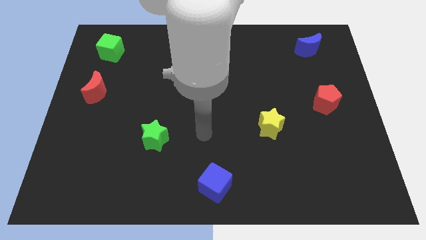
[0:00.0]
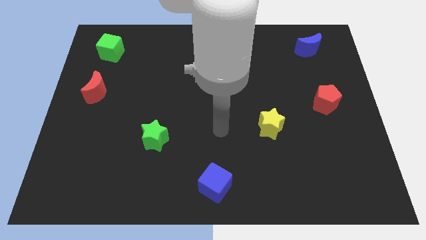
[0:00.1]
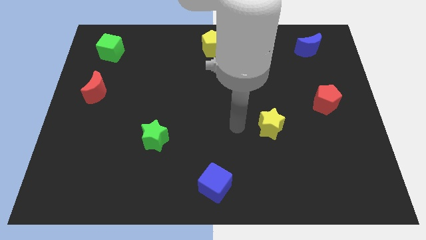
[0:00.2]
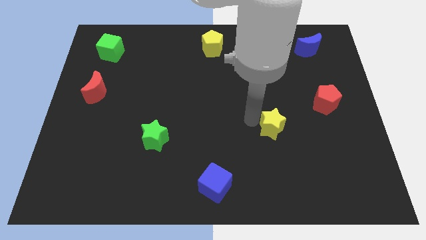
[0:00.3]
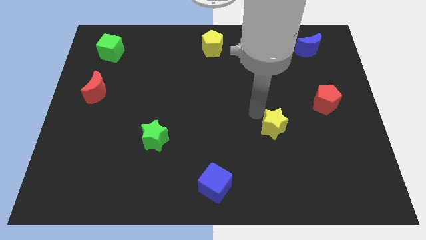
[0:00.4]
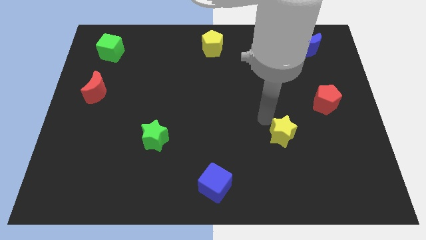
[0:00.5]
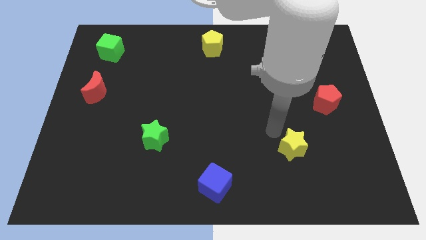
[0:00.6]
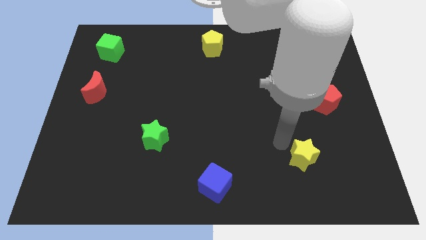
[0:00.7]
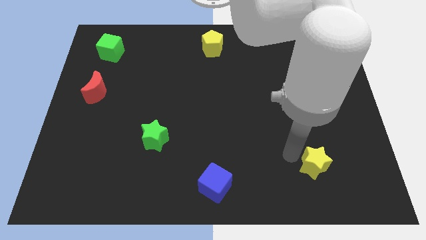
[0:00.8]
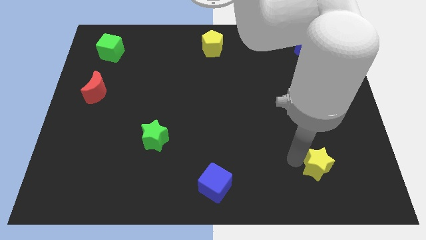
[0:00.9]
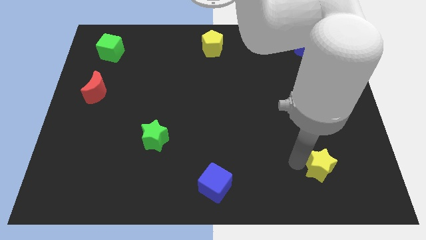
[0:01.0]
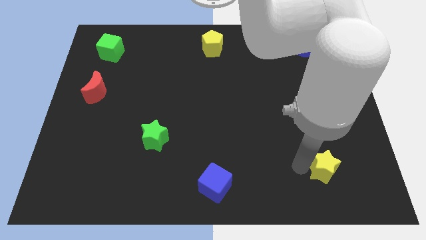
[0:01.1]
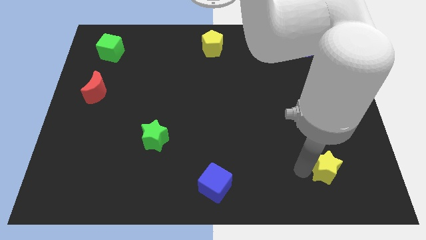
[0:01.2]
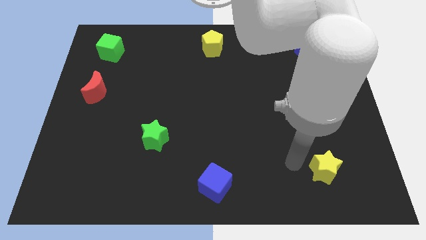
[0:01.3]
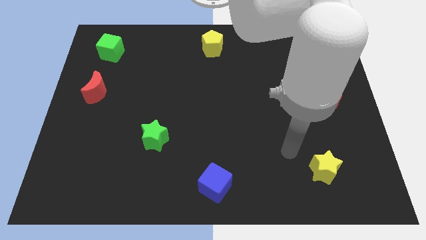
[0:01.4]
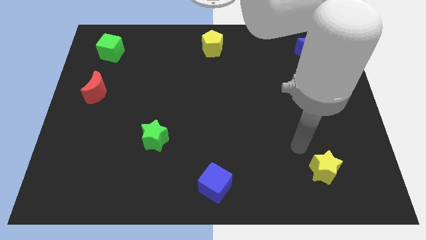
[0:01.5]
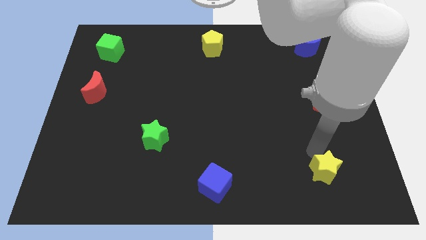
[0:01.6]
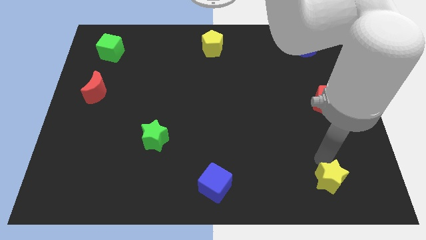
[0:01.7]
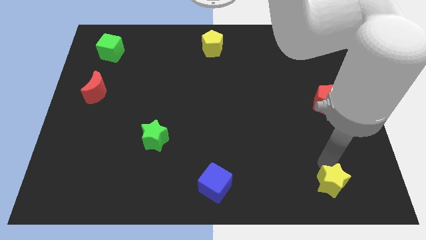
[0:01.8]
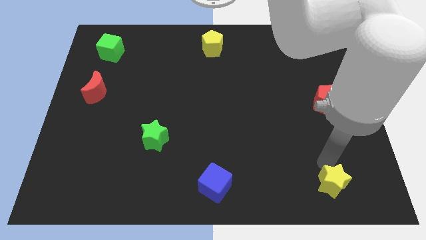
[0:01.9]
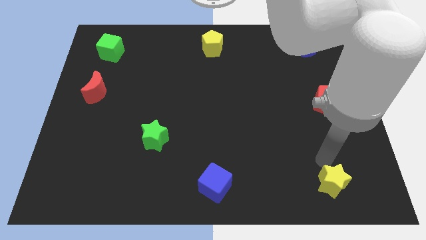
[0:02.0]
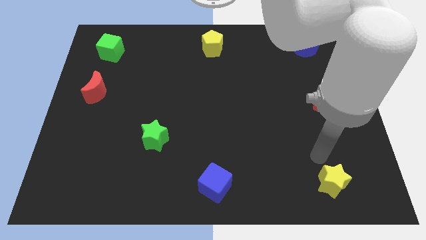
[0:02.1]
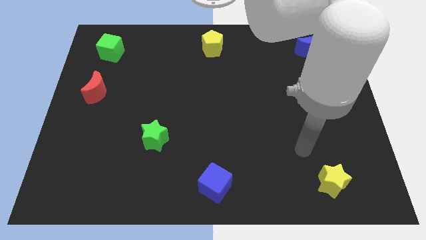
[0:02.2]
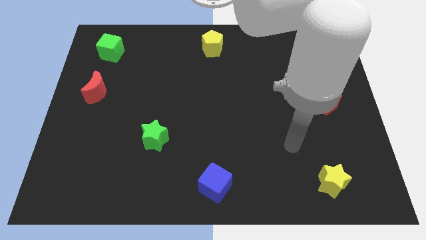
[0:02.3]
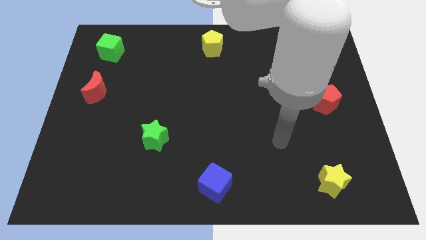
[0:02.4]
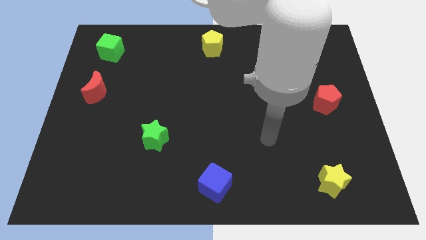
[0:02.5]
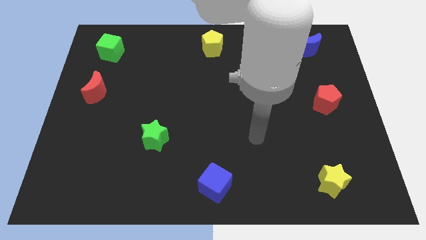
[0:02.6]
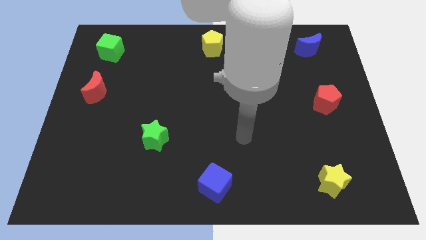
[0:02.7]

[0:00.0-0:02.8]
move yellow star towards bottom right of the board

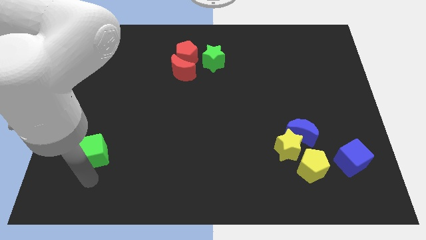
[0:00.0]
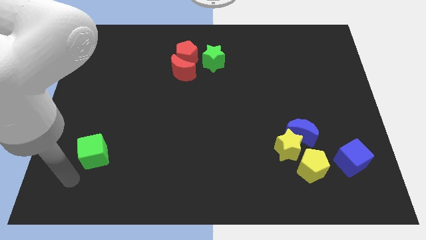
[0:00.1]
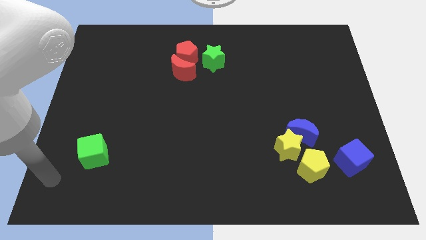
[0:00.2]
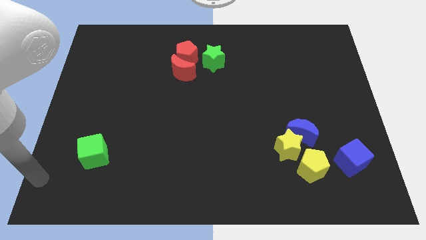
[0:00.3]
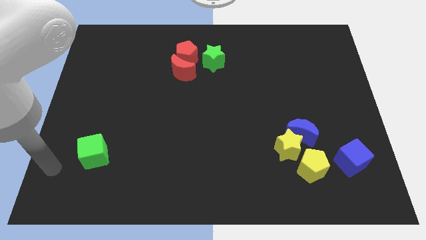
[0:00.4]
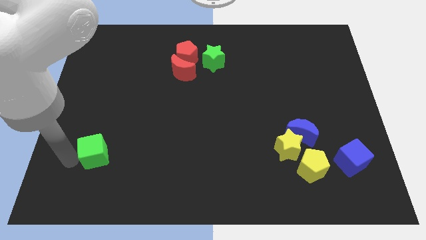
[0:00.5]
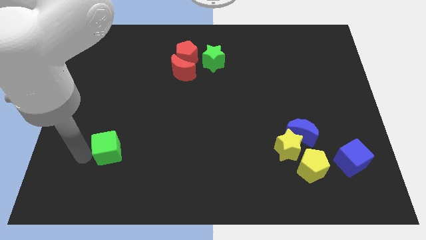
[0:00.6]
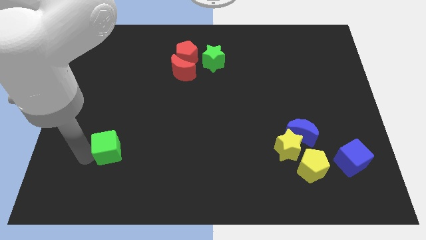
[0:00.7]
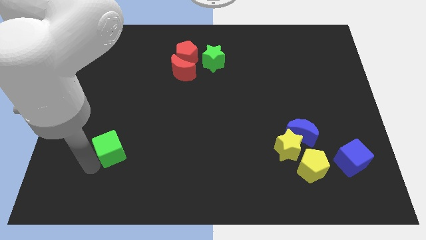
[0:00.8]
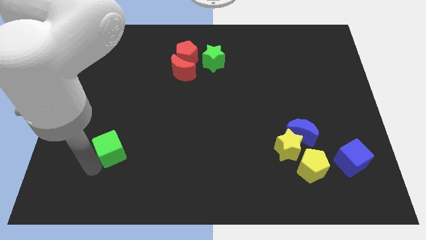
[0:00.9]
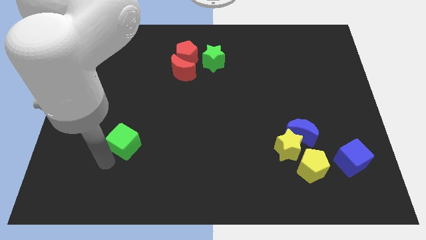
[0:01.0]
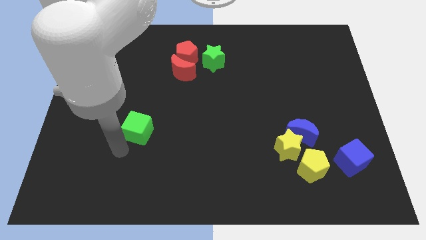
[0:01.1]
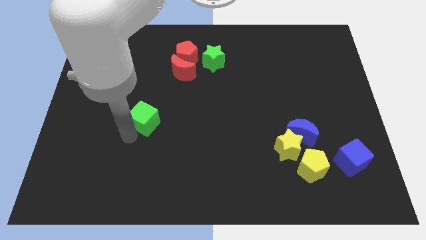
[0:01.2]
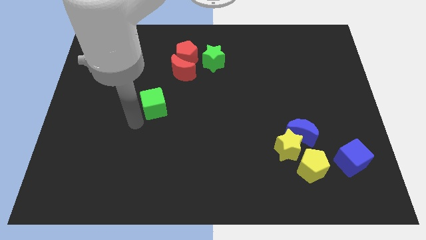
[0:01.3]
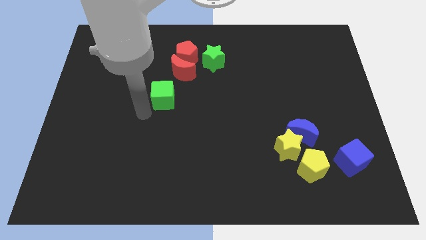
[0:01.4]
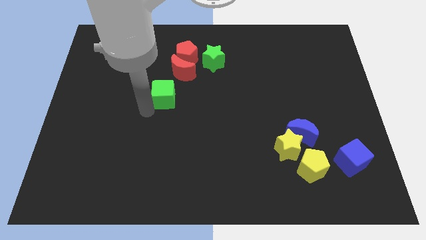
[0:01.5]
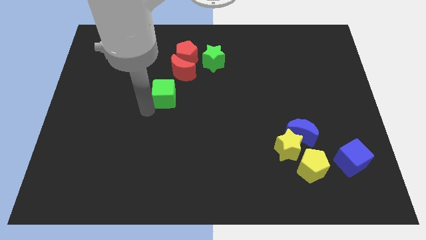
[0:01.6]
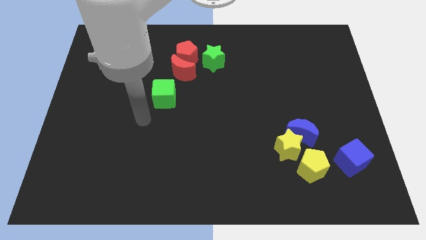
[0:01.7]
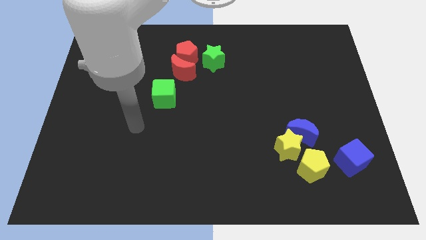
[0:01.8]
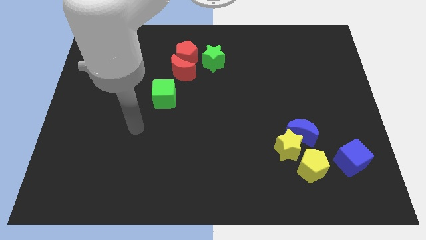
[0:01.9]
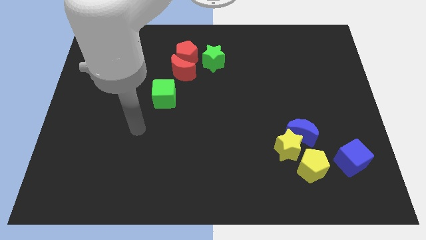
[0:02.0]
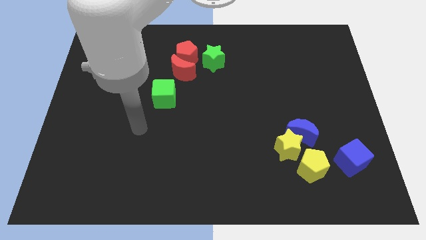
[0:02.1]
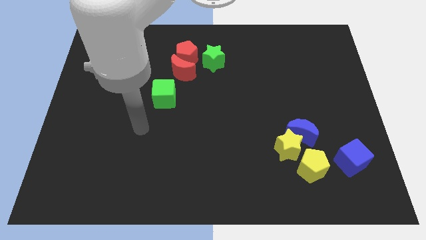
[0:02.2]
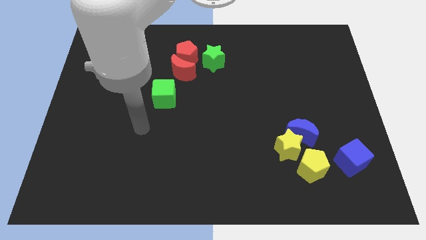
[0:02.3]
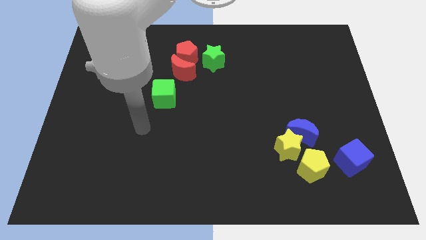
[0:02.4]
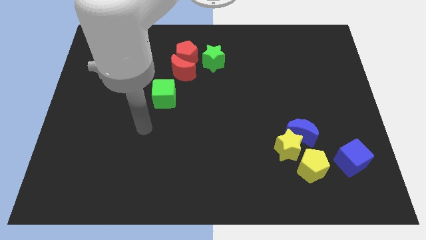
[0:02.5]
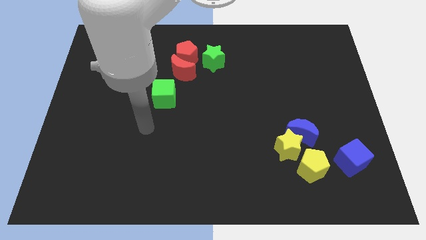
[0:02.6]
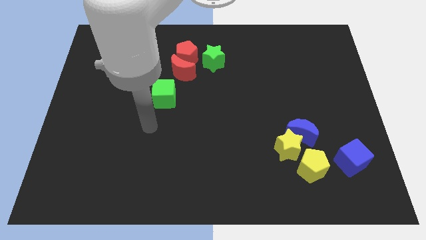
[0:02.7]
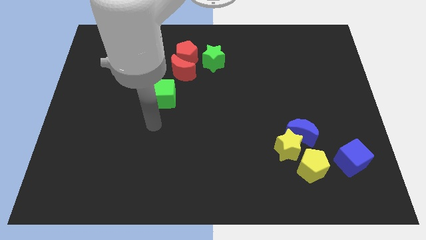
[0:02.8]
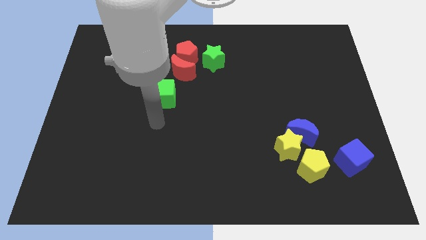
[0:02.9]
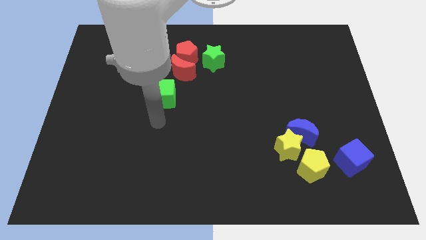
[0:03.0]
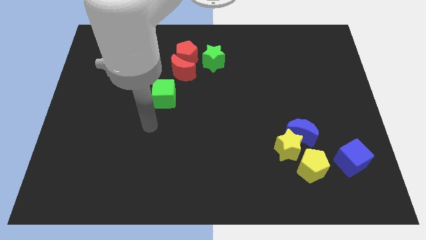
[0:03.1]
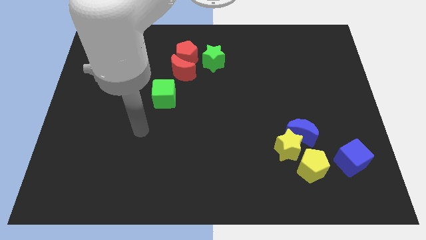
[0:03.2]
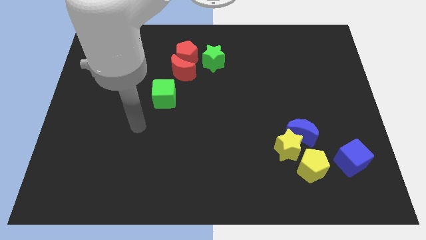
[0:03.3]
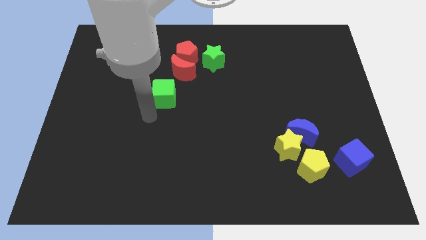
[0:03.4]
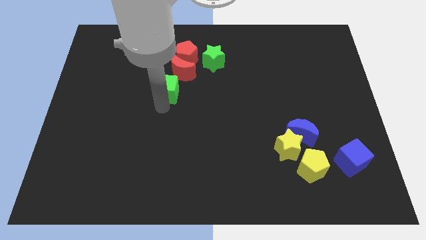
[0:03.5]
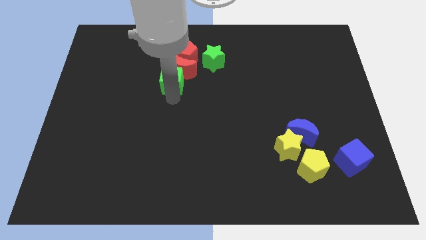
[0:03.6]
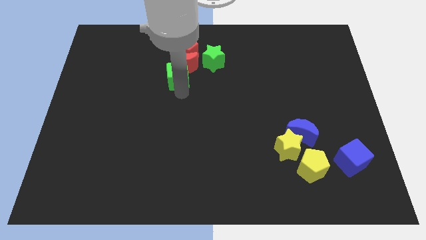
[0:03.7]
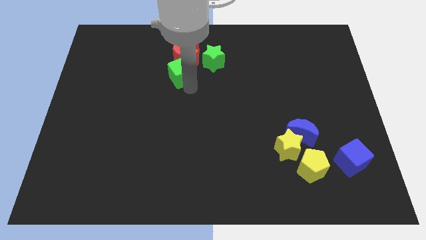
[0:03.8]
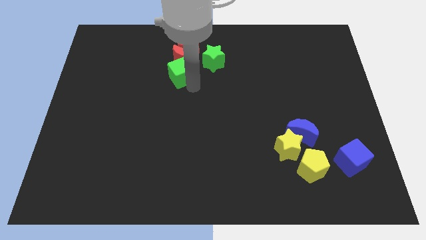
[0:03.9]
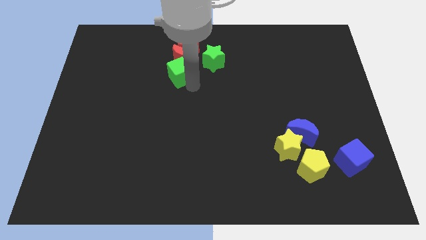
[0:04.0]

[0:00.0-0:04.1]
push the green cube into the red moon and red pentagon

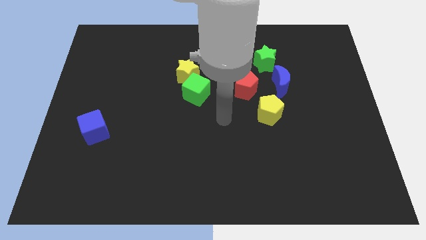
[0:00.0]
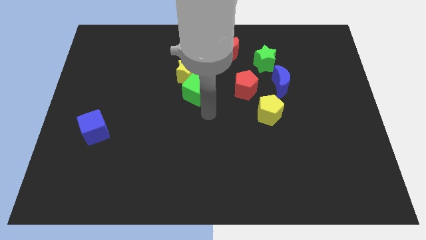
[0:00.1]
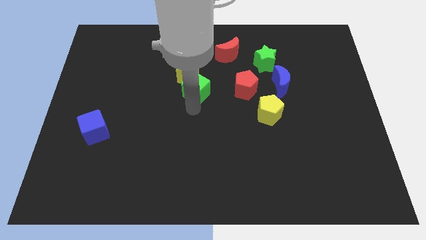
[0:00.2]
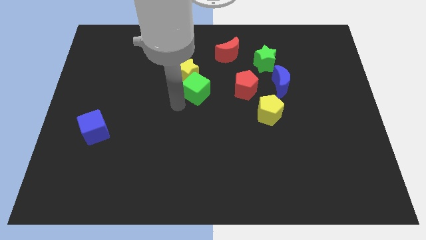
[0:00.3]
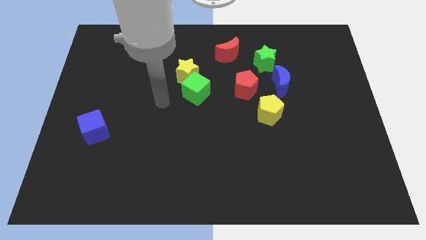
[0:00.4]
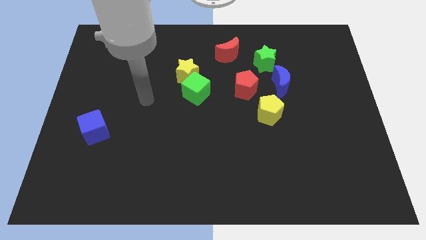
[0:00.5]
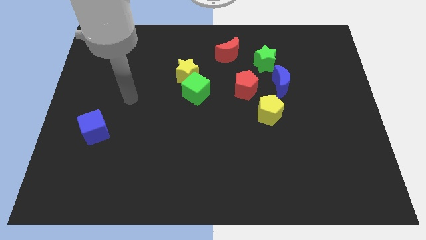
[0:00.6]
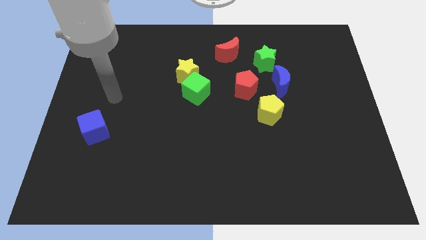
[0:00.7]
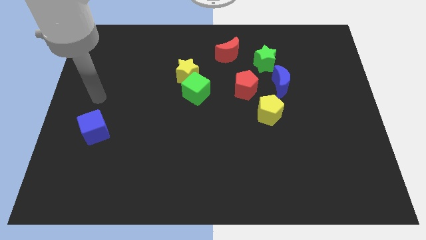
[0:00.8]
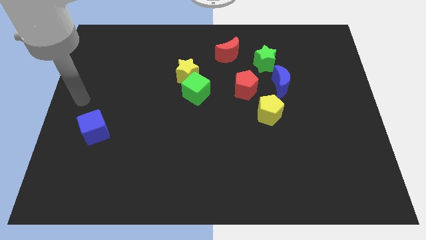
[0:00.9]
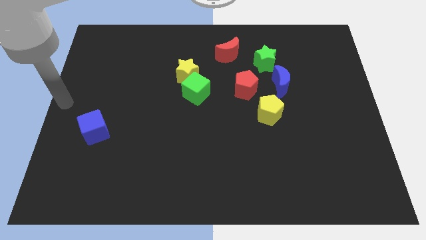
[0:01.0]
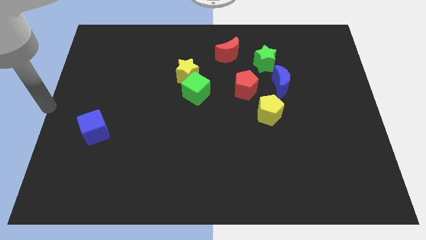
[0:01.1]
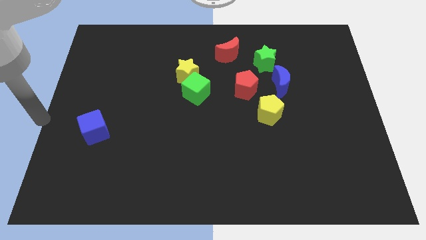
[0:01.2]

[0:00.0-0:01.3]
place your arm to the center left of the board

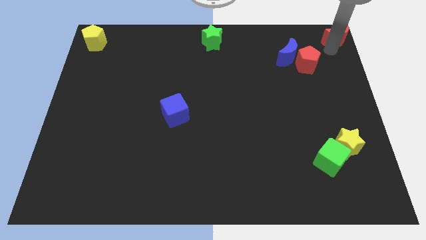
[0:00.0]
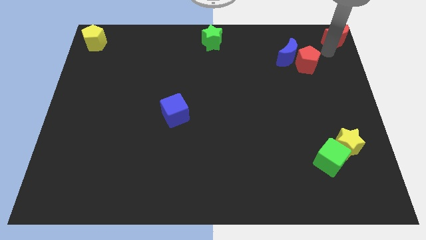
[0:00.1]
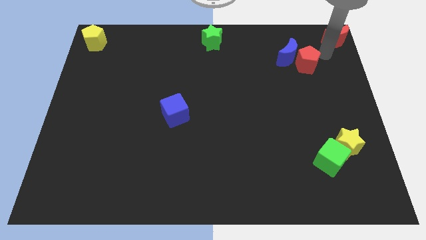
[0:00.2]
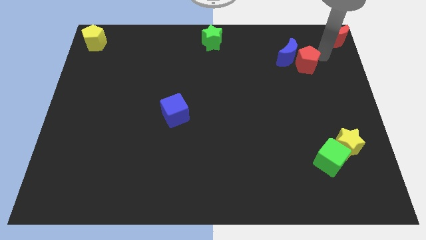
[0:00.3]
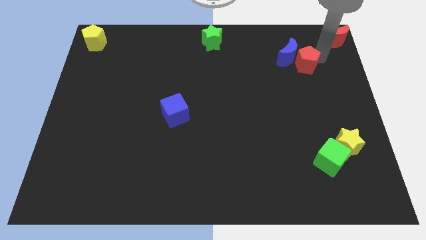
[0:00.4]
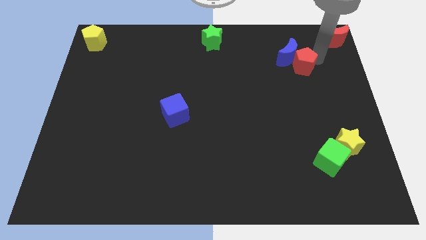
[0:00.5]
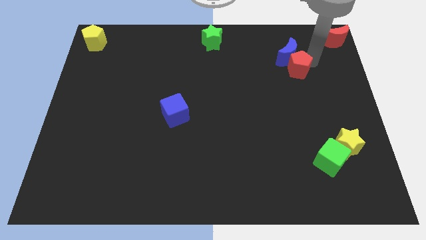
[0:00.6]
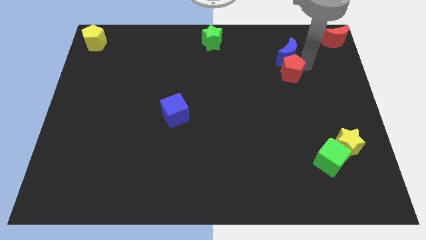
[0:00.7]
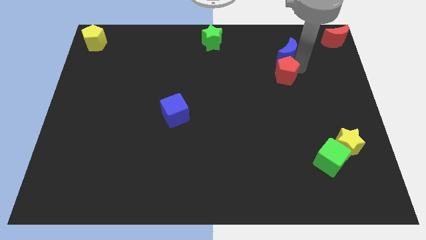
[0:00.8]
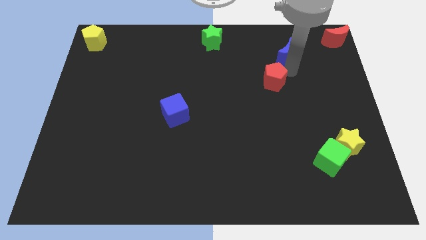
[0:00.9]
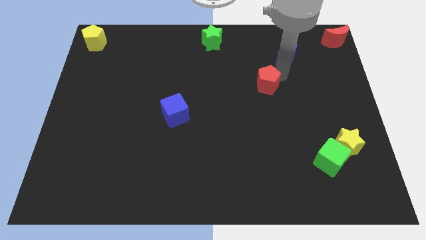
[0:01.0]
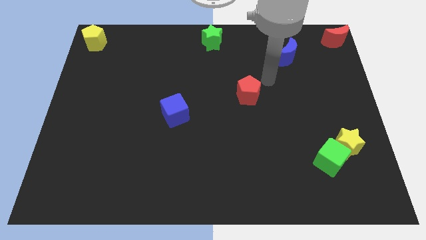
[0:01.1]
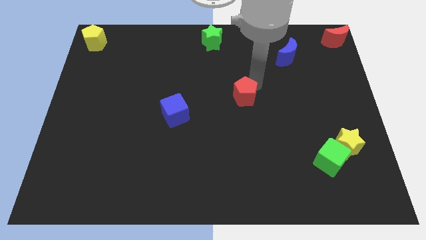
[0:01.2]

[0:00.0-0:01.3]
separate red pentagon from blue moon
